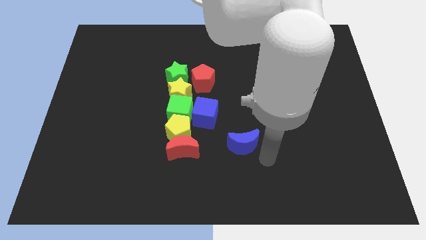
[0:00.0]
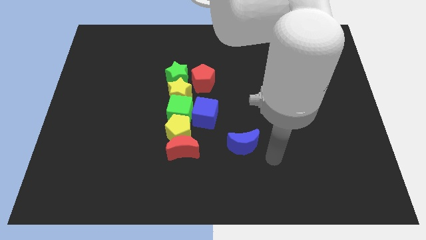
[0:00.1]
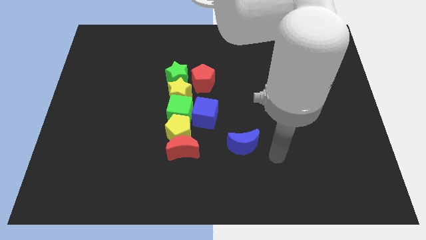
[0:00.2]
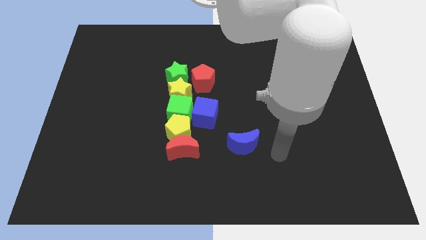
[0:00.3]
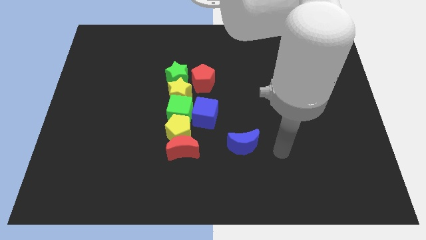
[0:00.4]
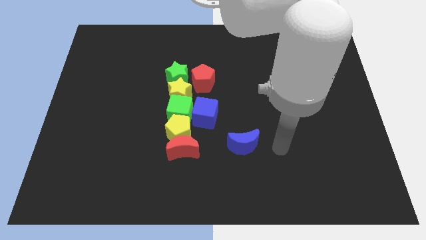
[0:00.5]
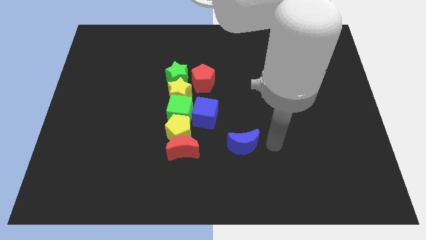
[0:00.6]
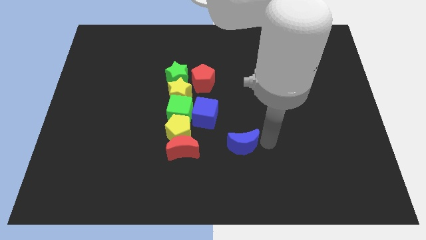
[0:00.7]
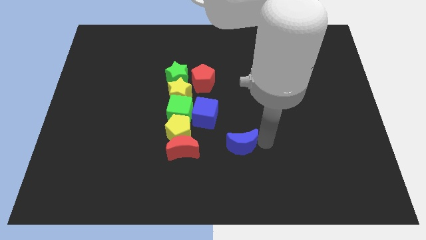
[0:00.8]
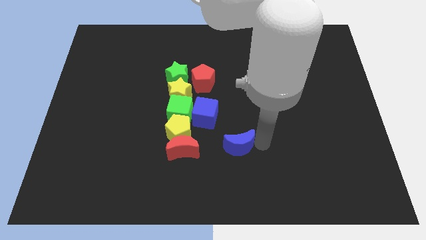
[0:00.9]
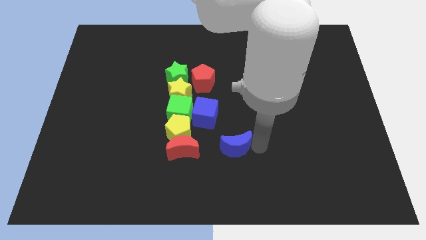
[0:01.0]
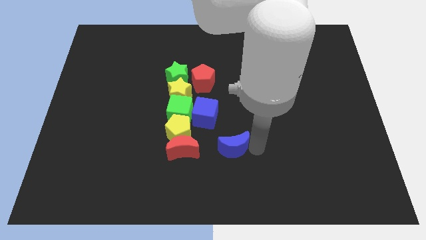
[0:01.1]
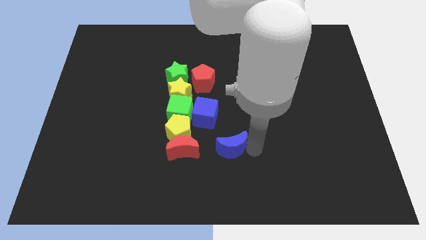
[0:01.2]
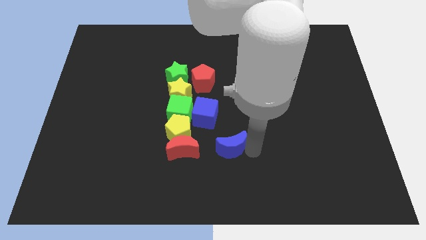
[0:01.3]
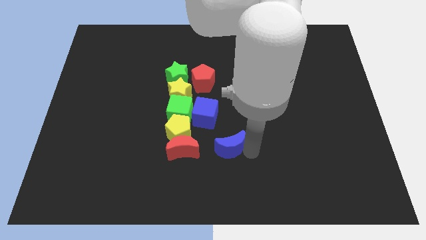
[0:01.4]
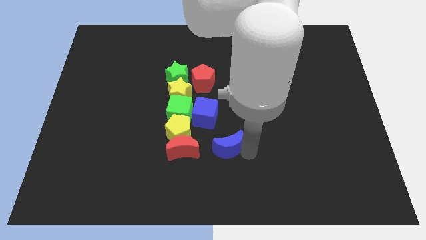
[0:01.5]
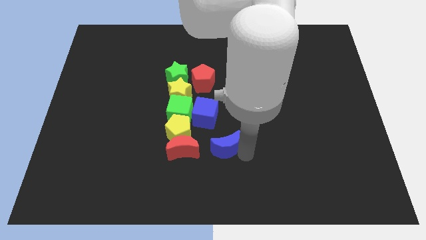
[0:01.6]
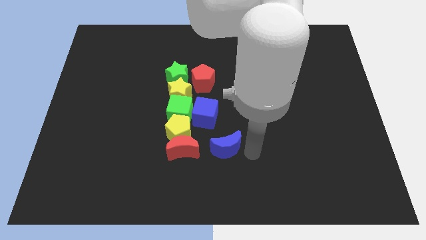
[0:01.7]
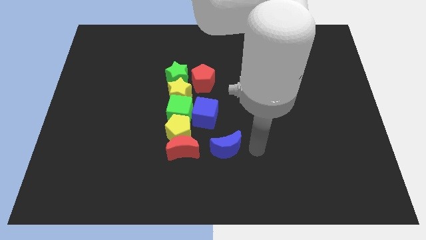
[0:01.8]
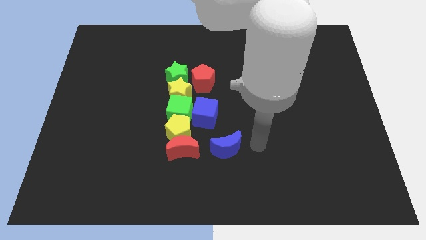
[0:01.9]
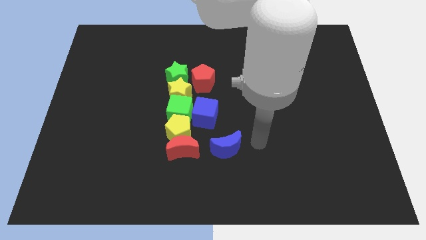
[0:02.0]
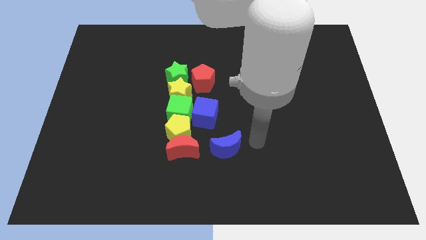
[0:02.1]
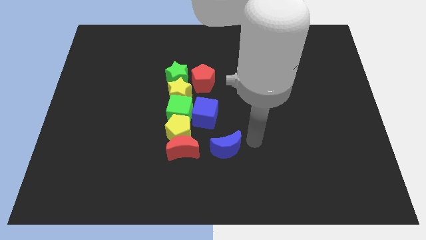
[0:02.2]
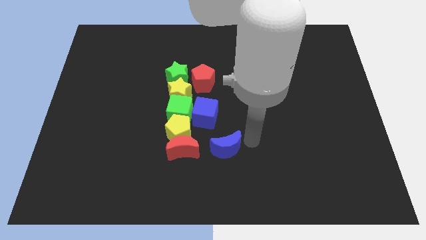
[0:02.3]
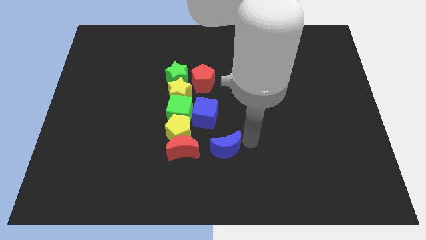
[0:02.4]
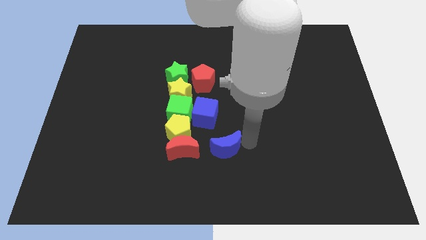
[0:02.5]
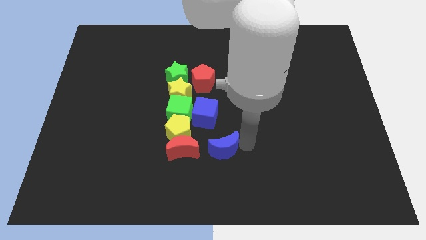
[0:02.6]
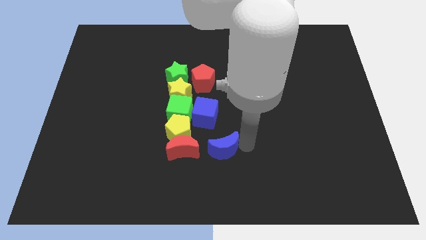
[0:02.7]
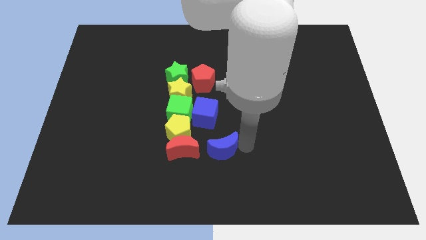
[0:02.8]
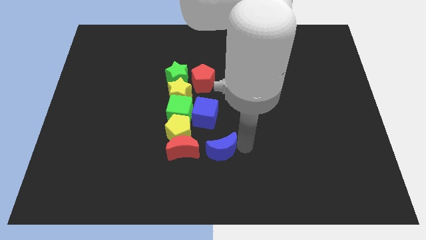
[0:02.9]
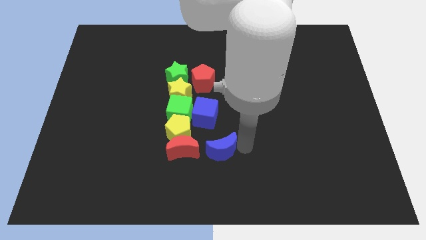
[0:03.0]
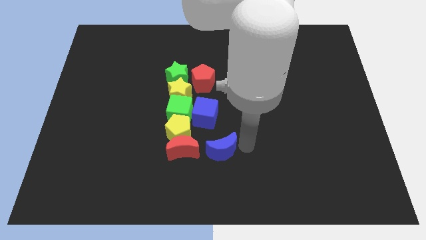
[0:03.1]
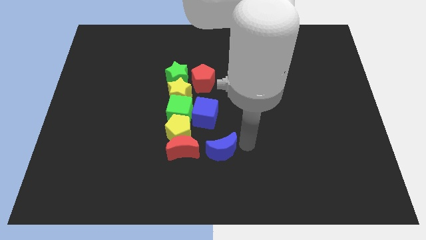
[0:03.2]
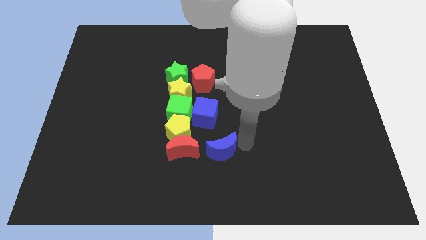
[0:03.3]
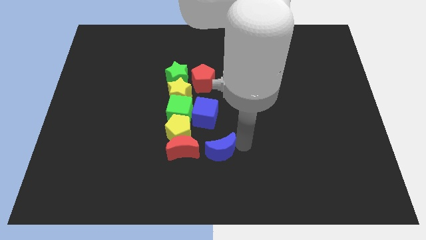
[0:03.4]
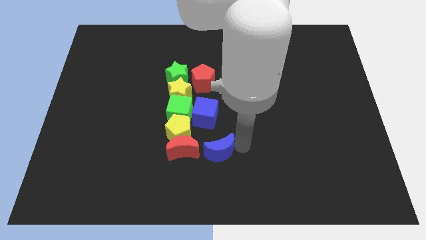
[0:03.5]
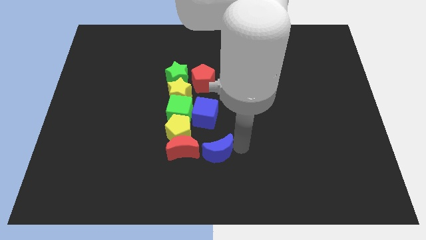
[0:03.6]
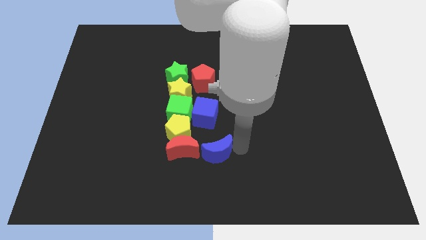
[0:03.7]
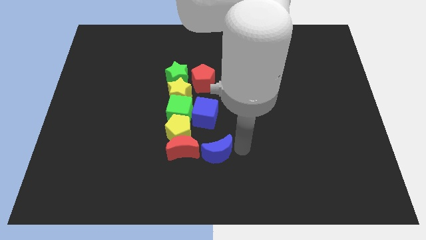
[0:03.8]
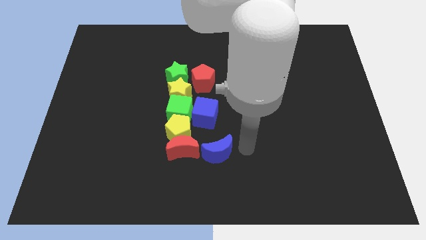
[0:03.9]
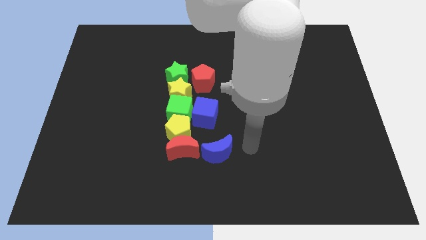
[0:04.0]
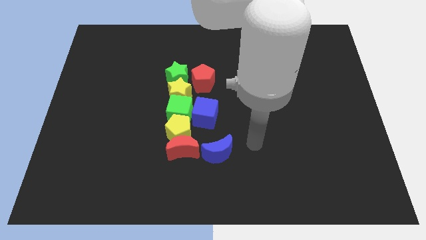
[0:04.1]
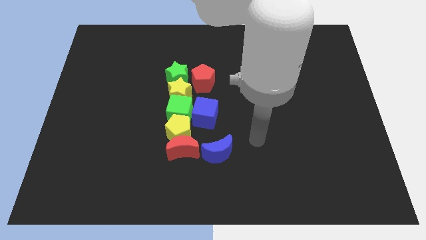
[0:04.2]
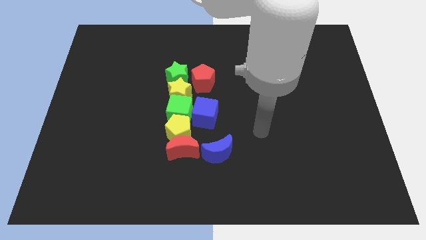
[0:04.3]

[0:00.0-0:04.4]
move the blue moon to the right of the red moon

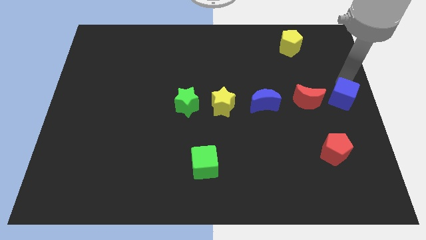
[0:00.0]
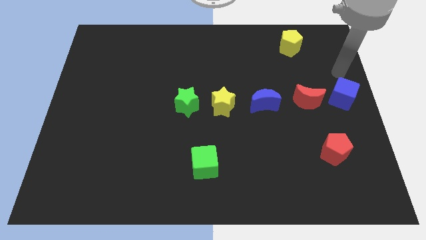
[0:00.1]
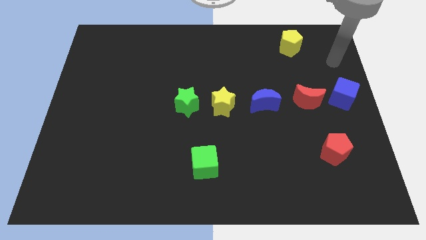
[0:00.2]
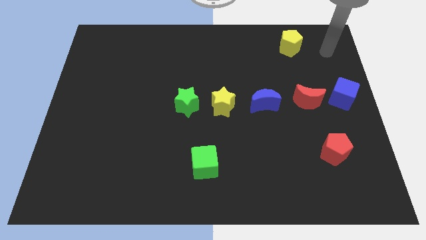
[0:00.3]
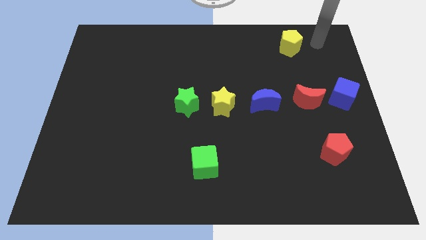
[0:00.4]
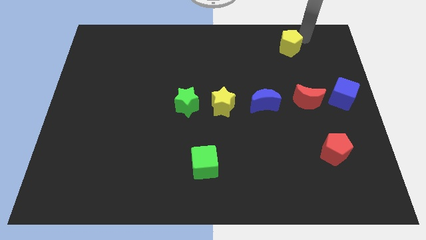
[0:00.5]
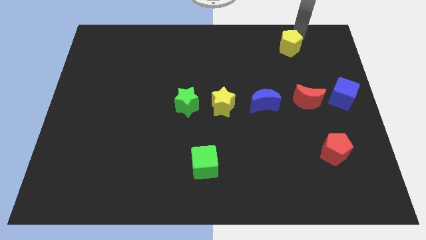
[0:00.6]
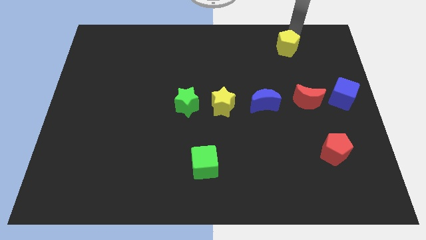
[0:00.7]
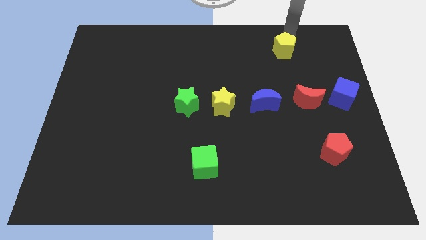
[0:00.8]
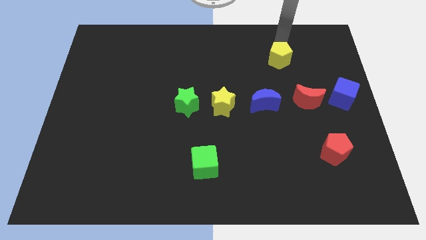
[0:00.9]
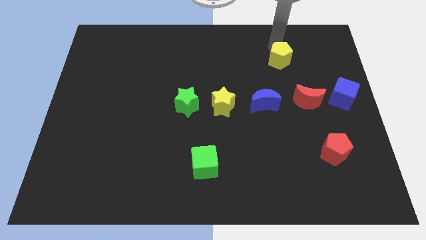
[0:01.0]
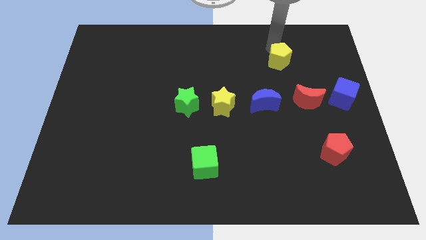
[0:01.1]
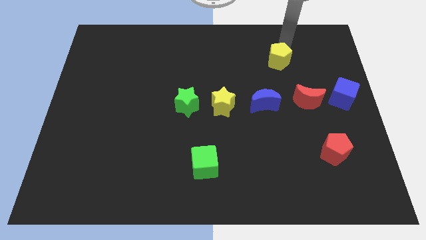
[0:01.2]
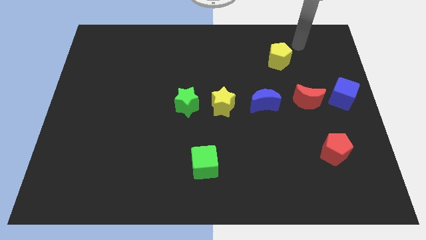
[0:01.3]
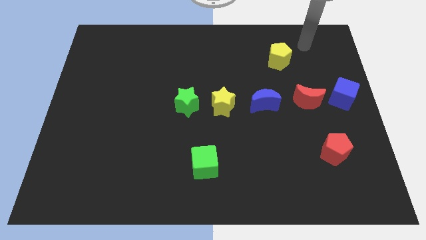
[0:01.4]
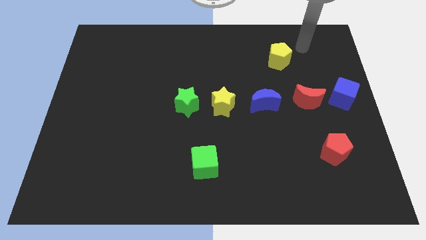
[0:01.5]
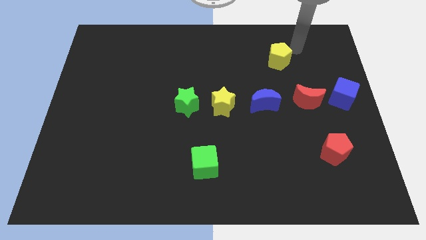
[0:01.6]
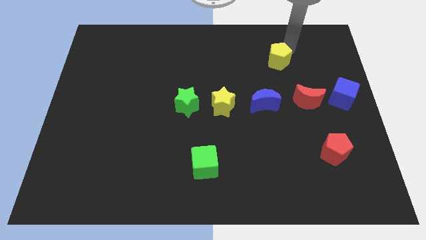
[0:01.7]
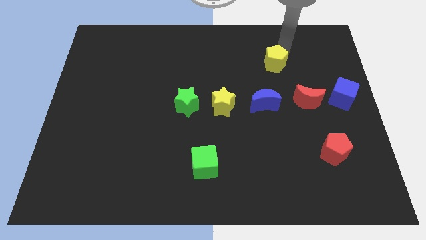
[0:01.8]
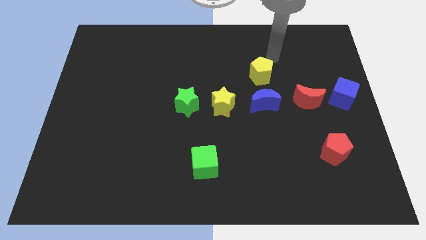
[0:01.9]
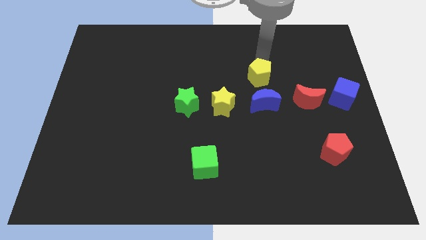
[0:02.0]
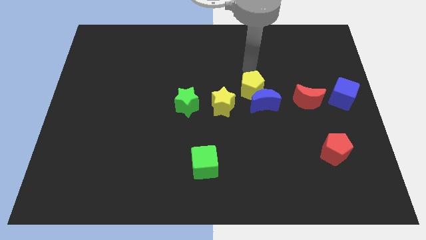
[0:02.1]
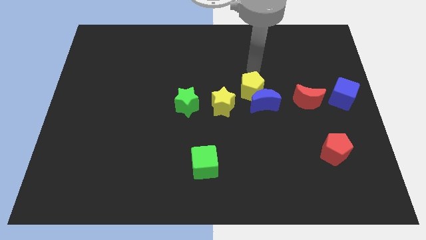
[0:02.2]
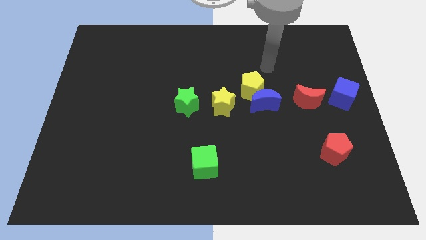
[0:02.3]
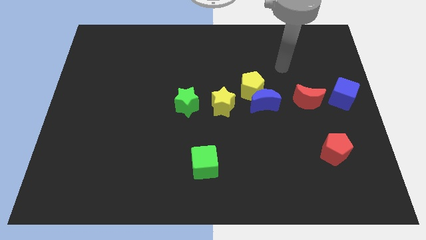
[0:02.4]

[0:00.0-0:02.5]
push the yellow pentagon into the blue moon

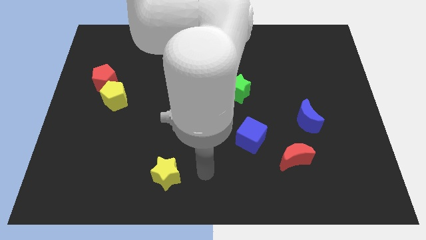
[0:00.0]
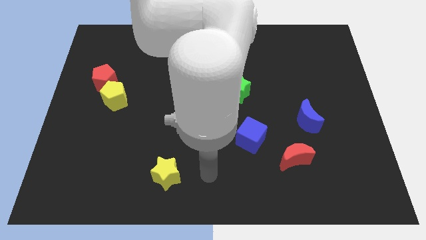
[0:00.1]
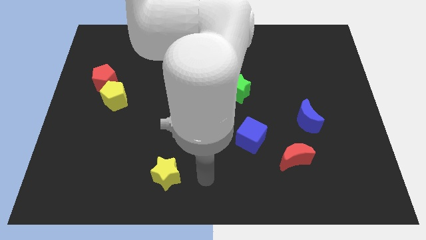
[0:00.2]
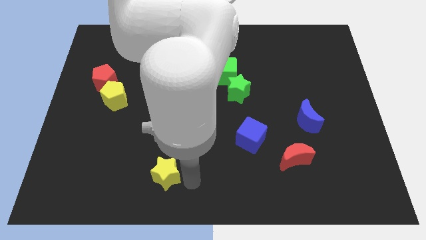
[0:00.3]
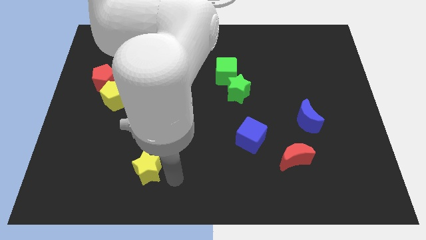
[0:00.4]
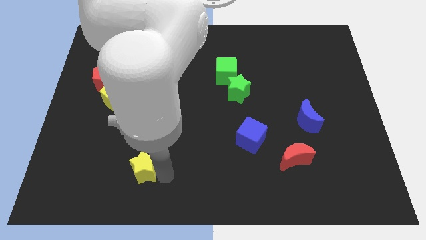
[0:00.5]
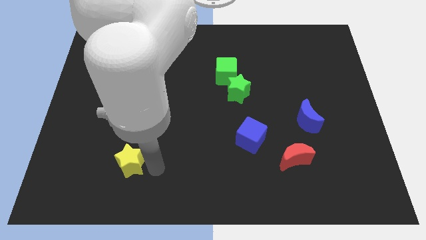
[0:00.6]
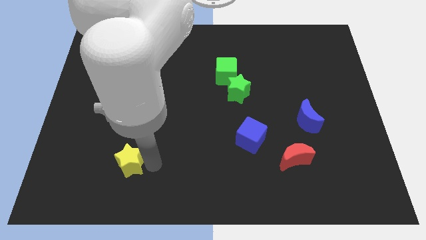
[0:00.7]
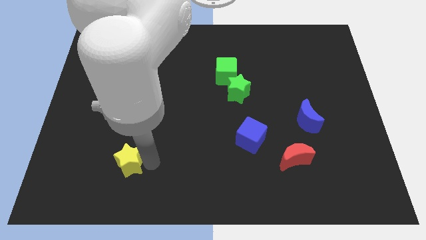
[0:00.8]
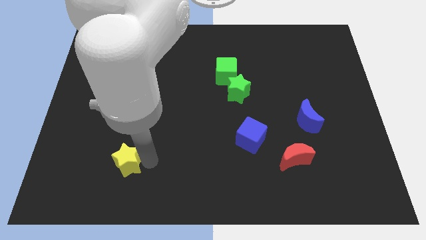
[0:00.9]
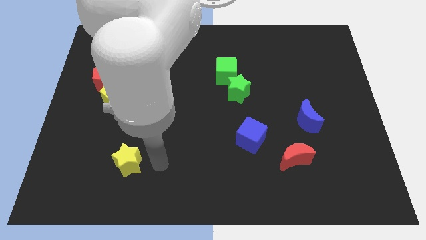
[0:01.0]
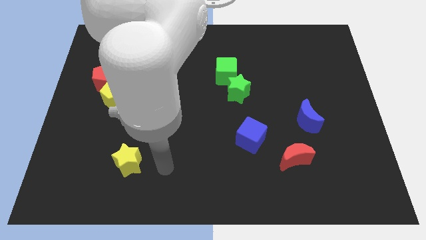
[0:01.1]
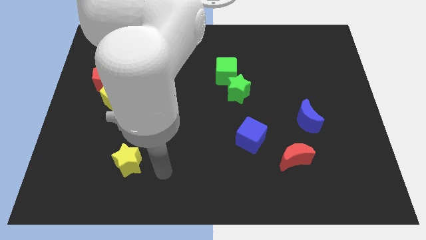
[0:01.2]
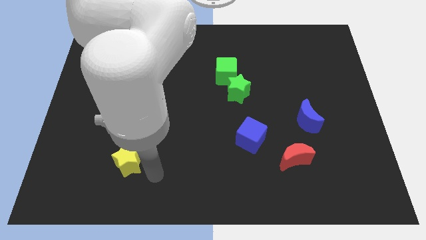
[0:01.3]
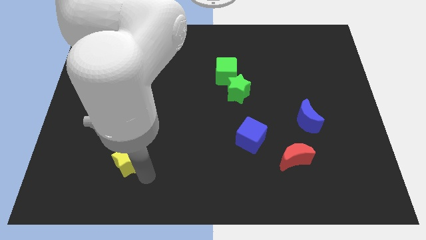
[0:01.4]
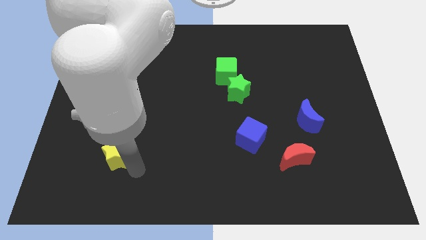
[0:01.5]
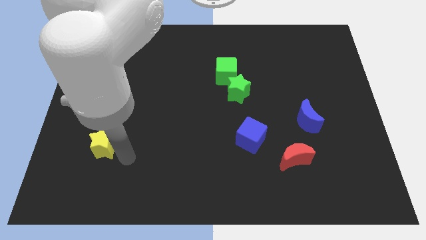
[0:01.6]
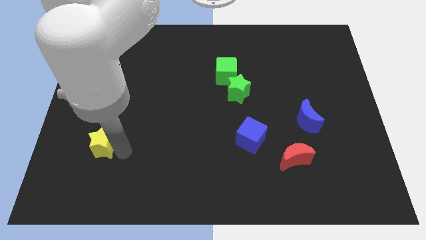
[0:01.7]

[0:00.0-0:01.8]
push the yellow star close to the yellow pentagon

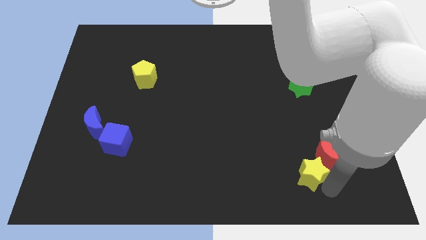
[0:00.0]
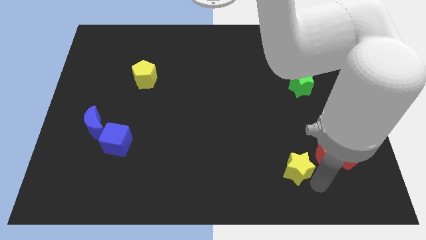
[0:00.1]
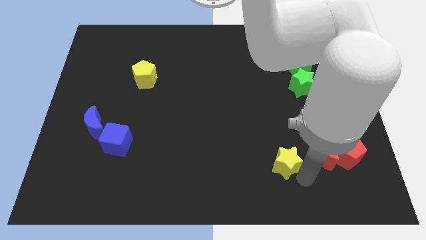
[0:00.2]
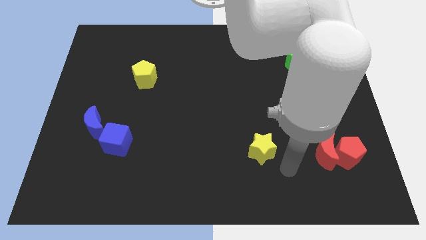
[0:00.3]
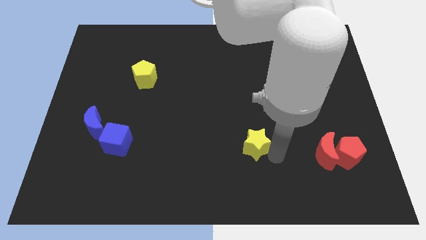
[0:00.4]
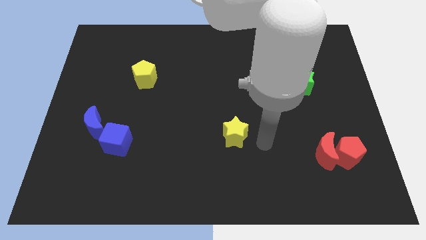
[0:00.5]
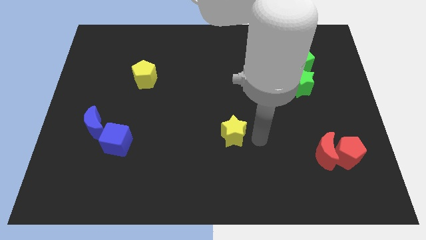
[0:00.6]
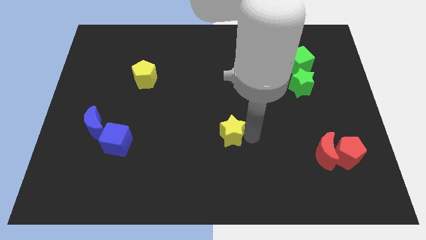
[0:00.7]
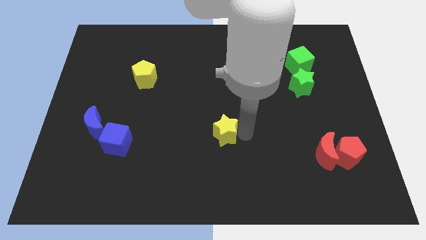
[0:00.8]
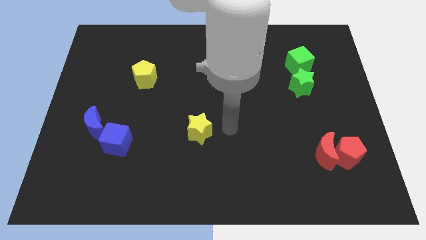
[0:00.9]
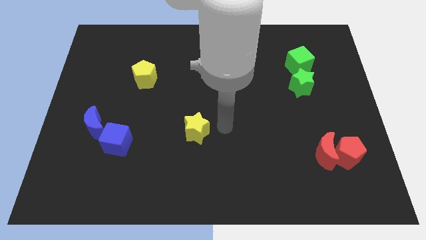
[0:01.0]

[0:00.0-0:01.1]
move the yellow star parallel to the right of the blue cube
